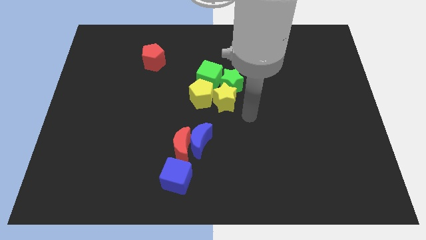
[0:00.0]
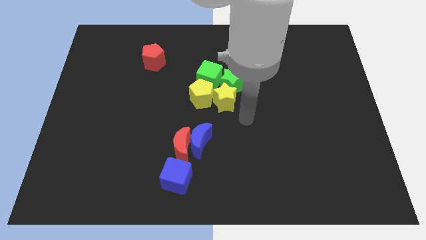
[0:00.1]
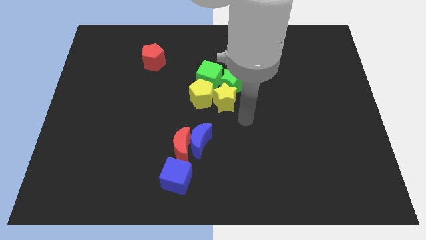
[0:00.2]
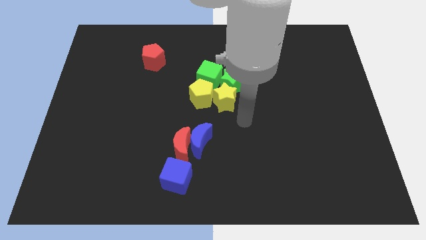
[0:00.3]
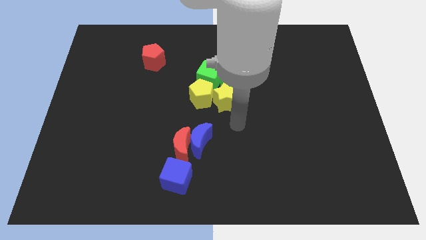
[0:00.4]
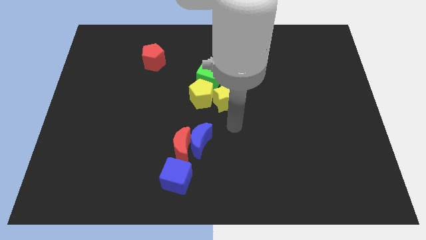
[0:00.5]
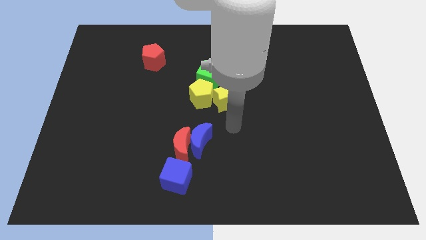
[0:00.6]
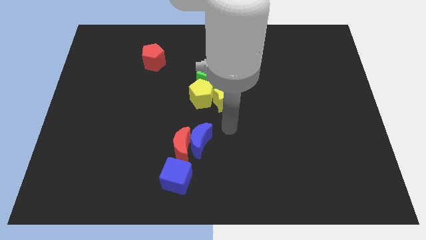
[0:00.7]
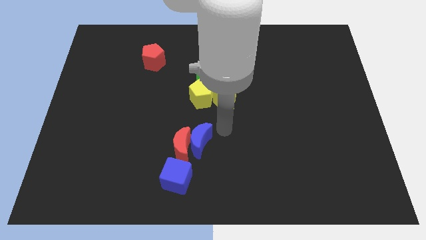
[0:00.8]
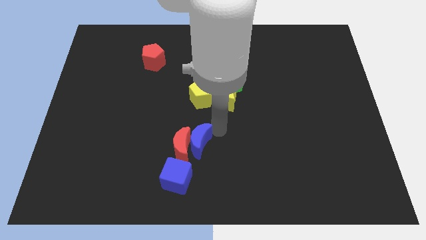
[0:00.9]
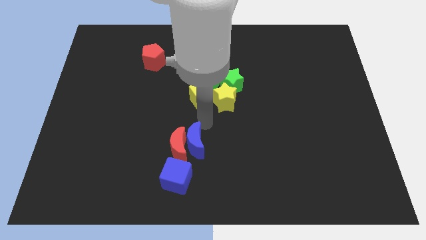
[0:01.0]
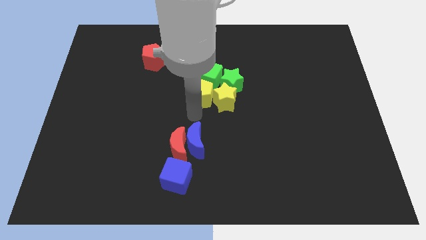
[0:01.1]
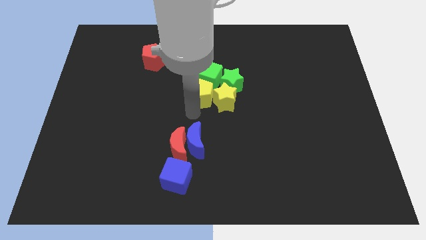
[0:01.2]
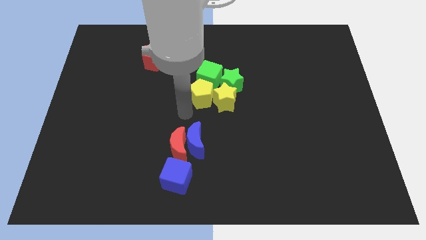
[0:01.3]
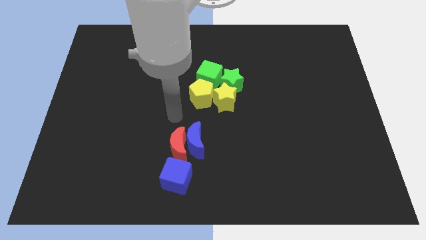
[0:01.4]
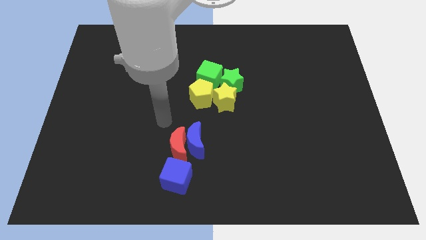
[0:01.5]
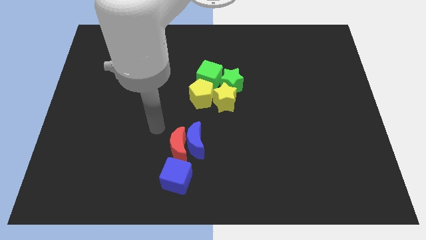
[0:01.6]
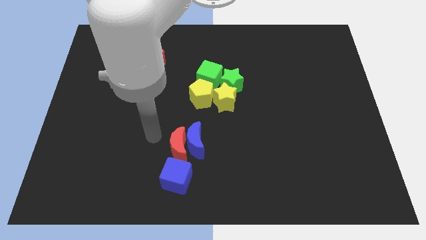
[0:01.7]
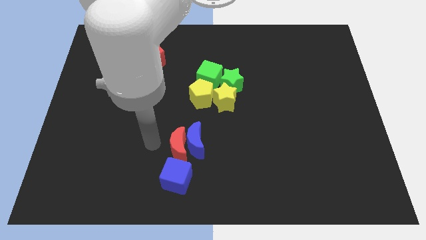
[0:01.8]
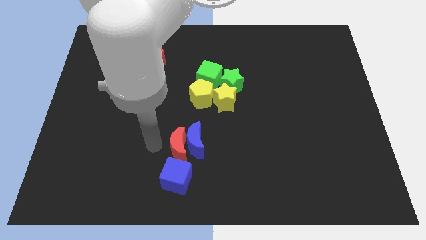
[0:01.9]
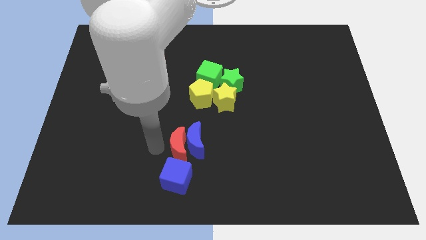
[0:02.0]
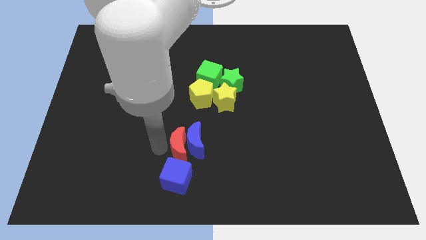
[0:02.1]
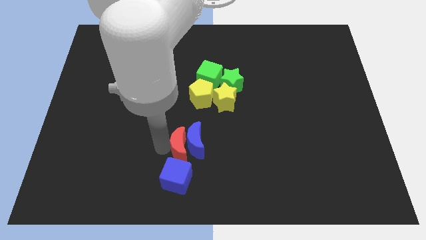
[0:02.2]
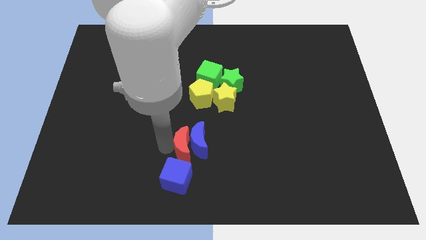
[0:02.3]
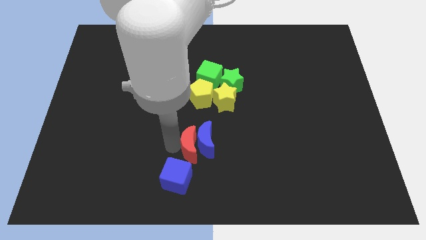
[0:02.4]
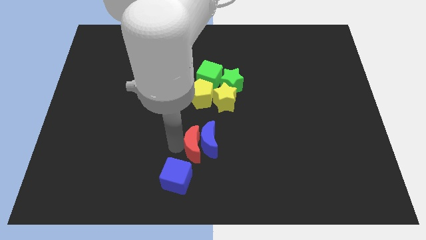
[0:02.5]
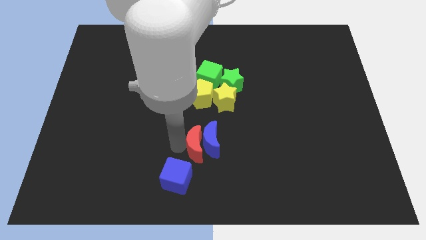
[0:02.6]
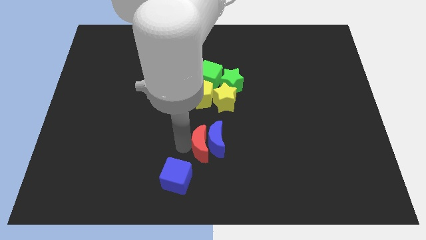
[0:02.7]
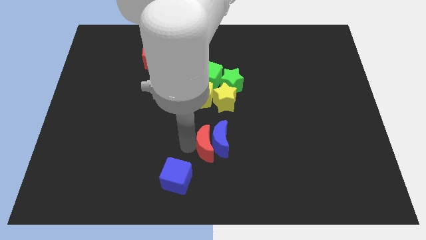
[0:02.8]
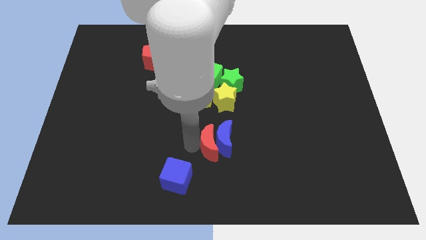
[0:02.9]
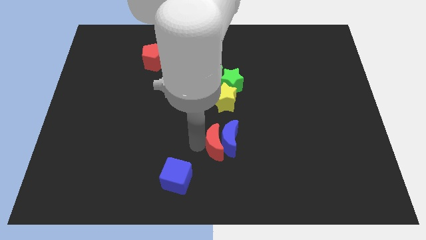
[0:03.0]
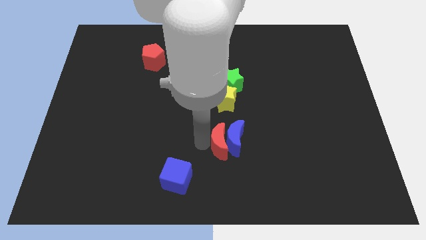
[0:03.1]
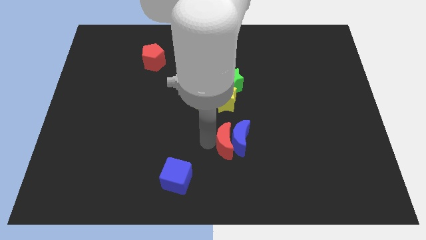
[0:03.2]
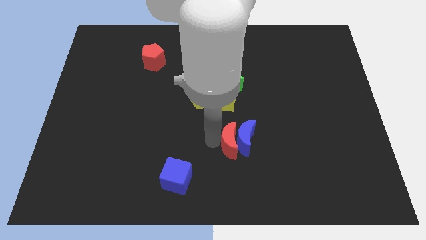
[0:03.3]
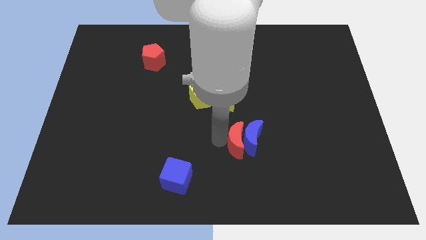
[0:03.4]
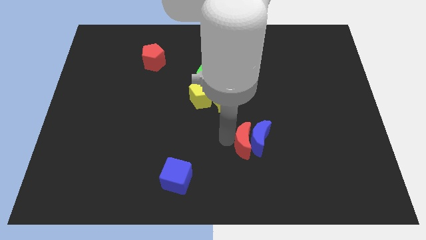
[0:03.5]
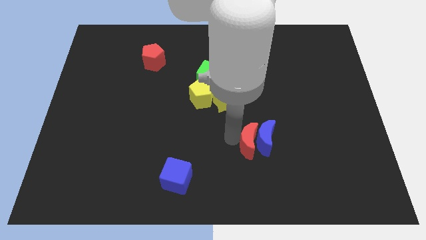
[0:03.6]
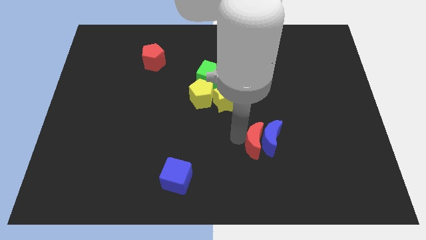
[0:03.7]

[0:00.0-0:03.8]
push the red crescent and blue crescent to the right side of the table

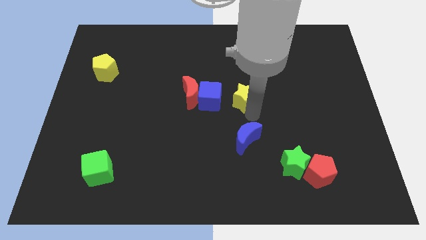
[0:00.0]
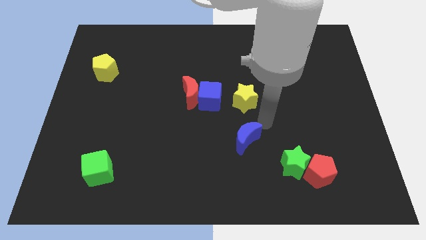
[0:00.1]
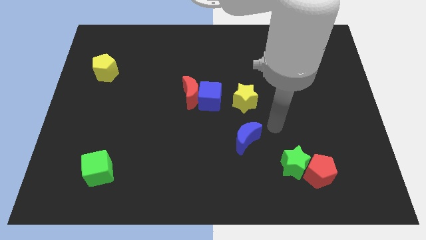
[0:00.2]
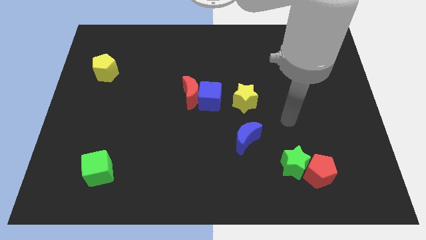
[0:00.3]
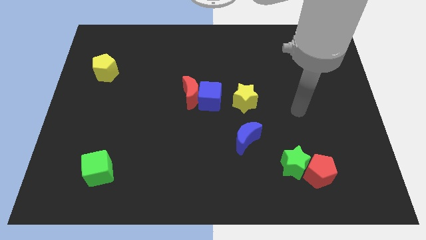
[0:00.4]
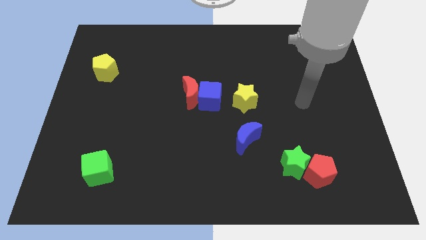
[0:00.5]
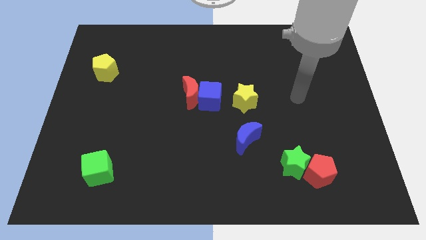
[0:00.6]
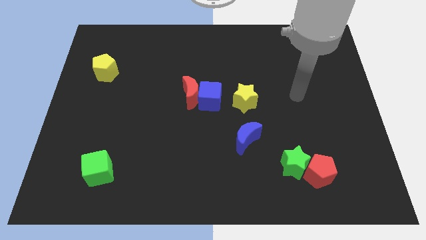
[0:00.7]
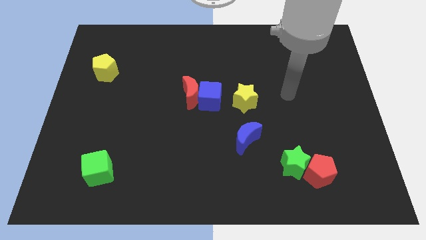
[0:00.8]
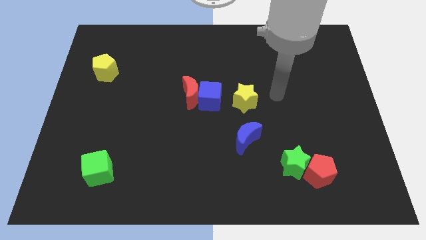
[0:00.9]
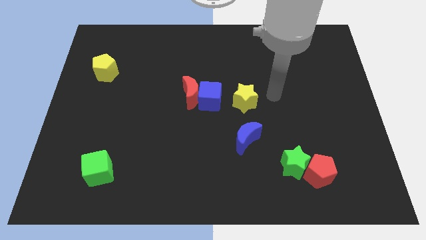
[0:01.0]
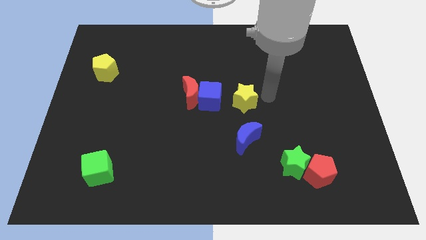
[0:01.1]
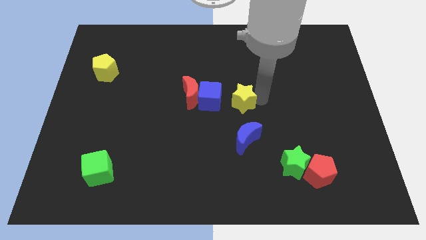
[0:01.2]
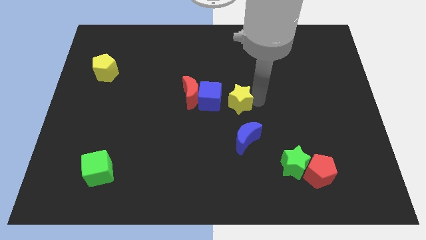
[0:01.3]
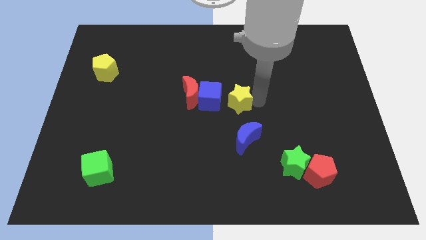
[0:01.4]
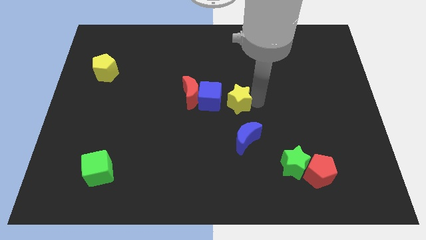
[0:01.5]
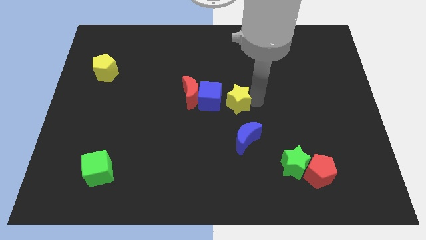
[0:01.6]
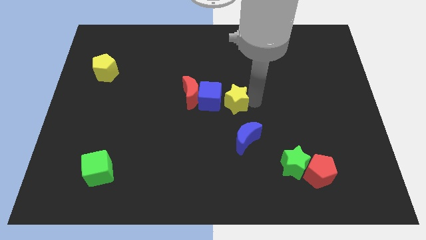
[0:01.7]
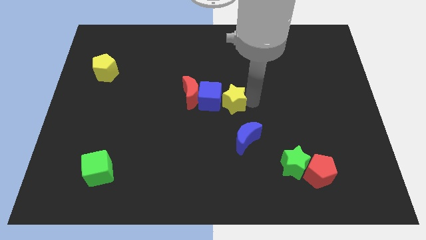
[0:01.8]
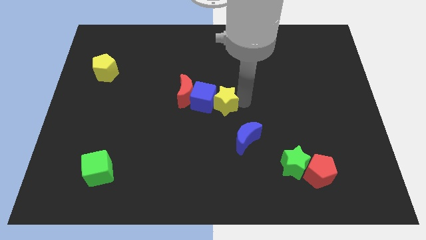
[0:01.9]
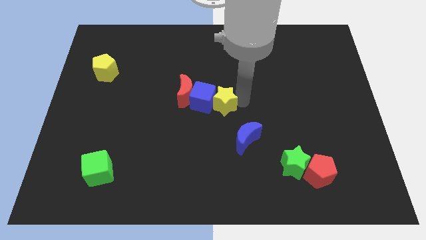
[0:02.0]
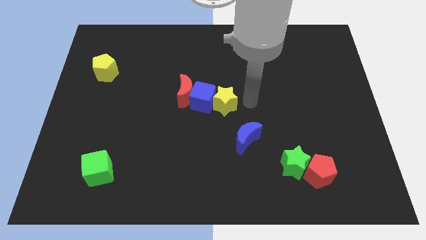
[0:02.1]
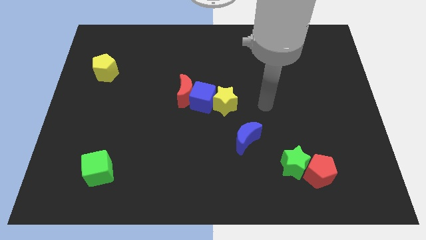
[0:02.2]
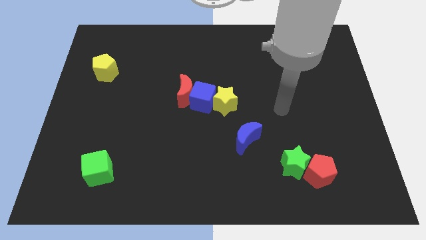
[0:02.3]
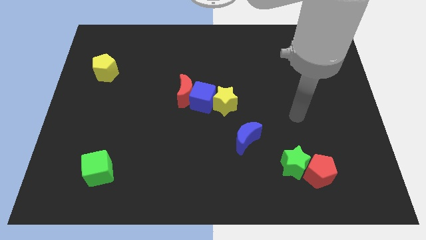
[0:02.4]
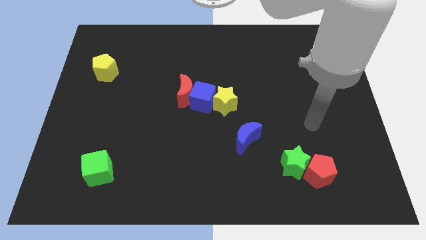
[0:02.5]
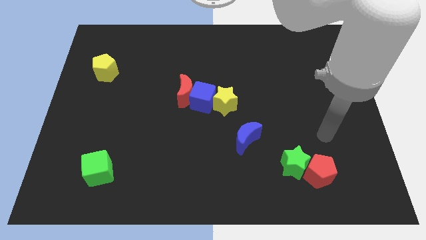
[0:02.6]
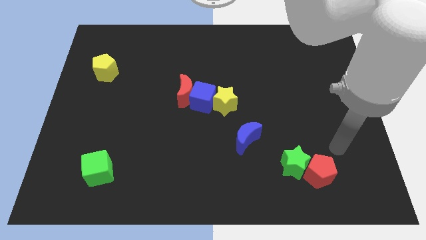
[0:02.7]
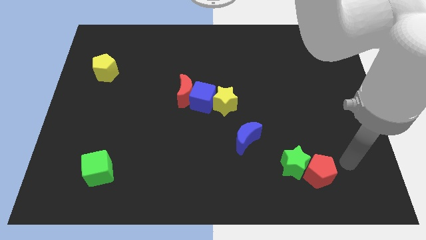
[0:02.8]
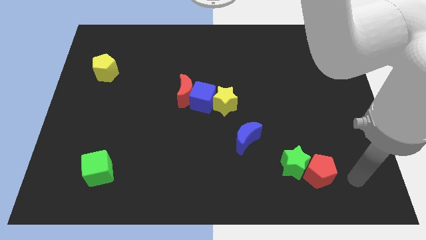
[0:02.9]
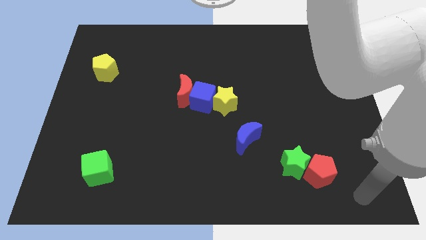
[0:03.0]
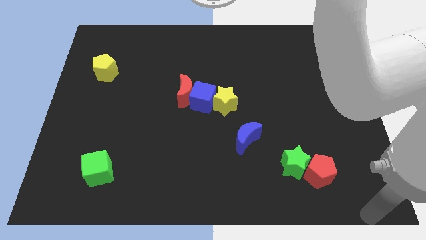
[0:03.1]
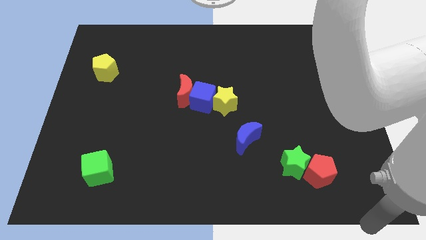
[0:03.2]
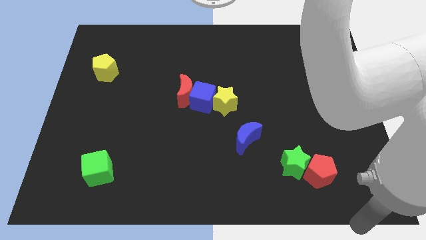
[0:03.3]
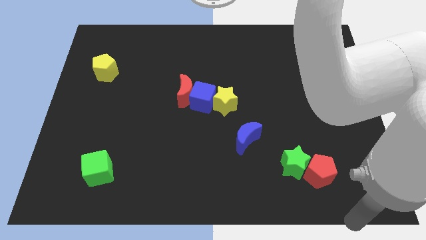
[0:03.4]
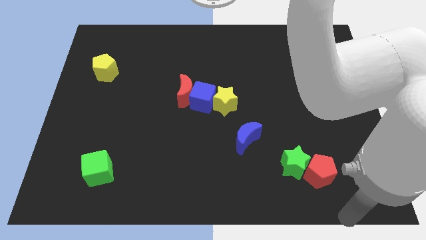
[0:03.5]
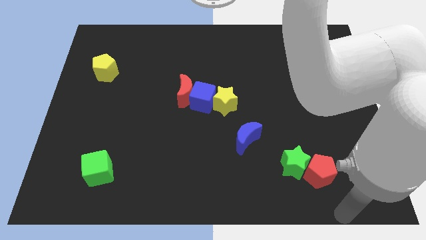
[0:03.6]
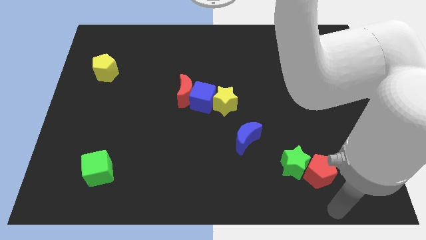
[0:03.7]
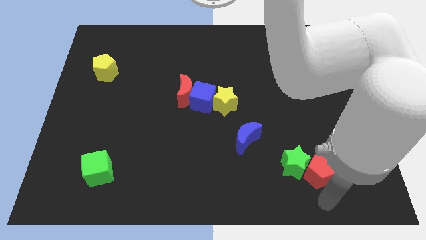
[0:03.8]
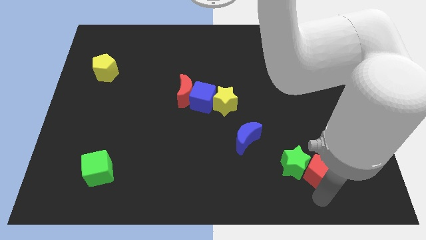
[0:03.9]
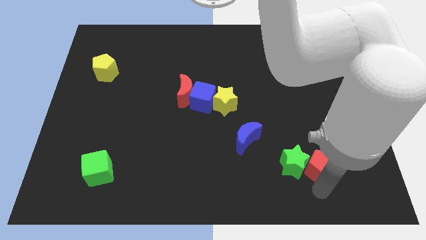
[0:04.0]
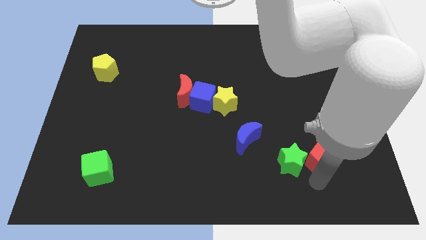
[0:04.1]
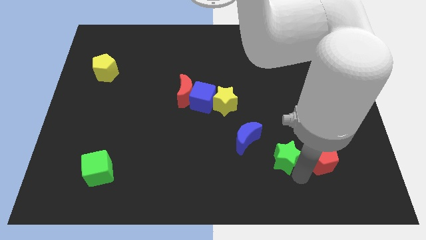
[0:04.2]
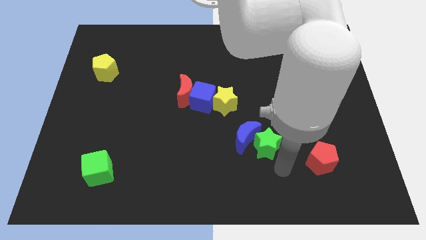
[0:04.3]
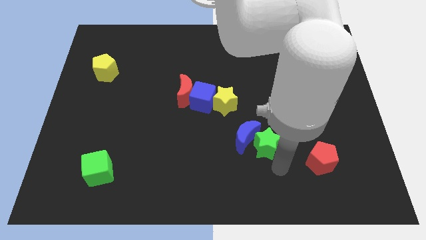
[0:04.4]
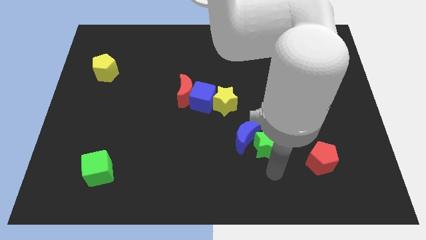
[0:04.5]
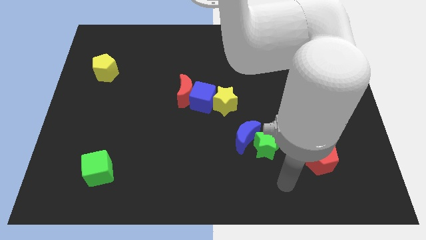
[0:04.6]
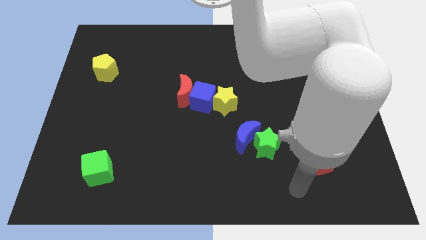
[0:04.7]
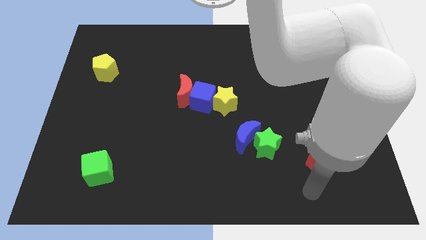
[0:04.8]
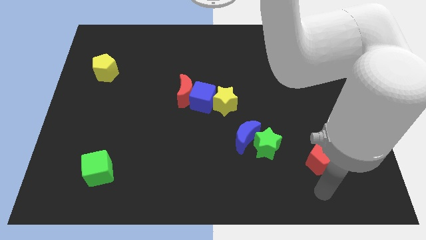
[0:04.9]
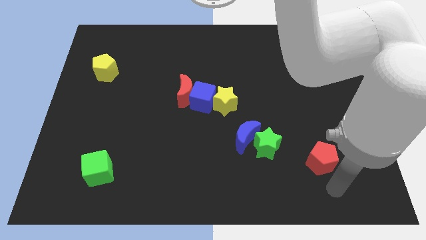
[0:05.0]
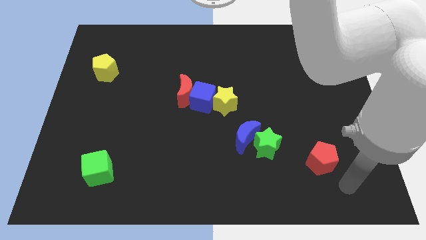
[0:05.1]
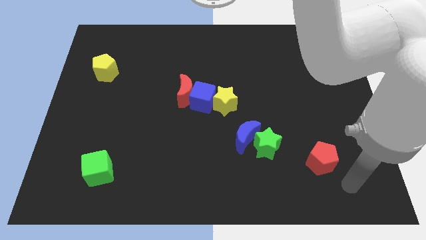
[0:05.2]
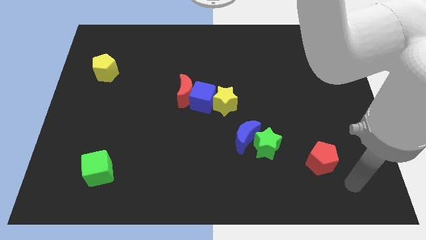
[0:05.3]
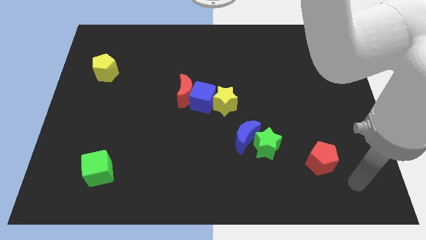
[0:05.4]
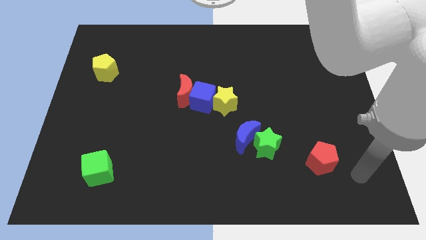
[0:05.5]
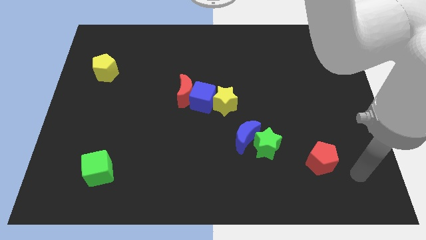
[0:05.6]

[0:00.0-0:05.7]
move the green star to right of the blue crescent
